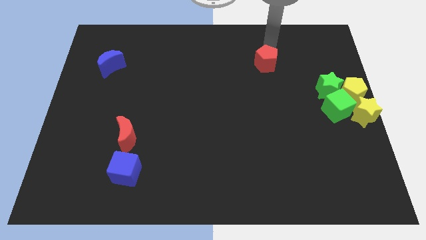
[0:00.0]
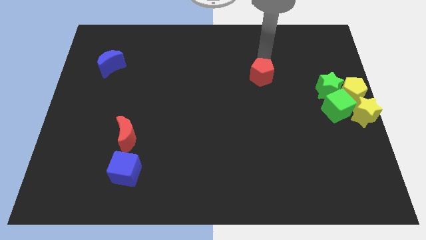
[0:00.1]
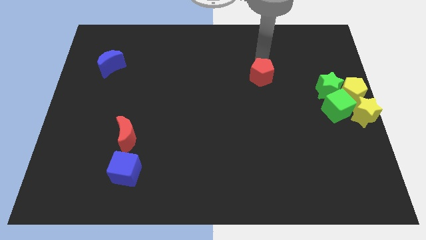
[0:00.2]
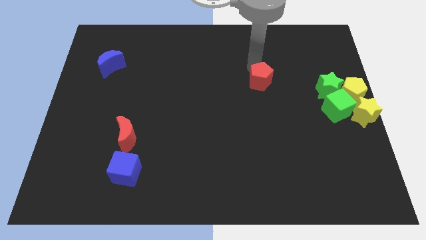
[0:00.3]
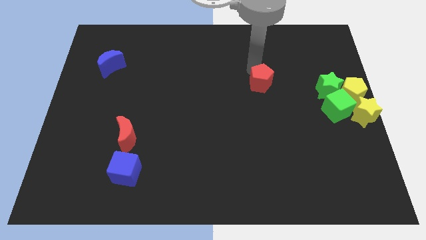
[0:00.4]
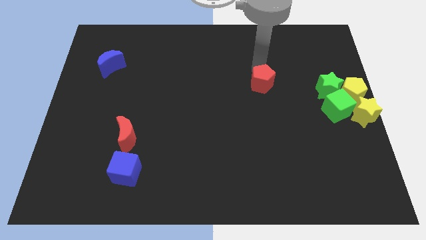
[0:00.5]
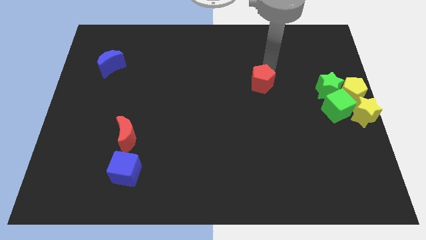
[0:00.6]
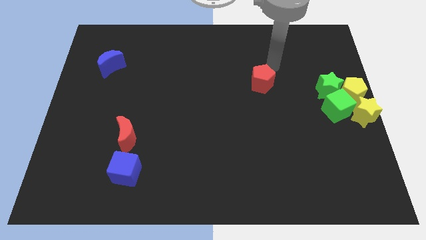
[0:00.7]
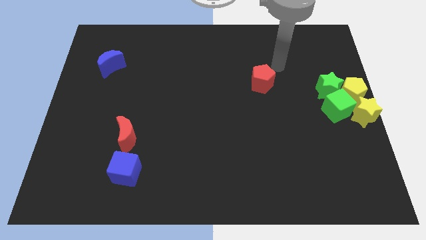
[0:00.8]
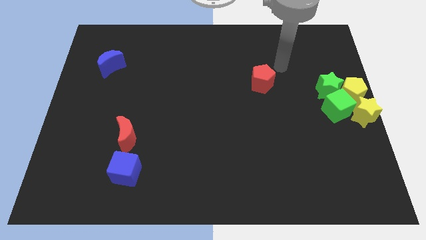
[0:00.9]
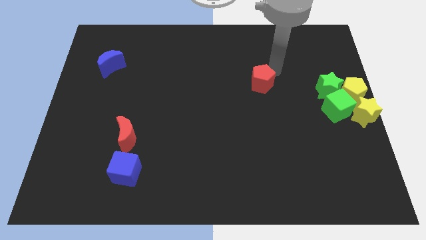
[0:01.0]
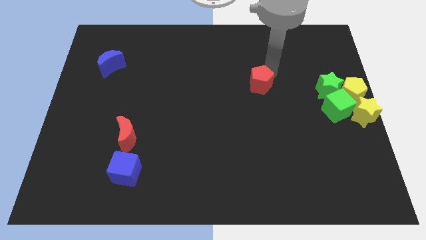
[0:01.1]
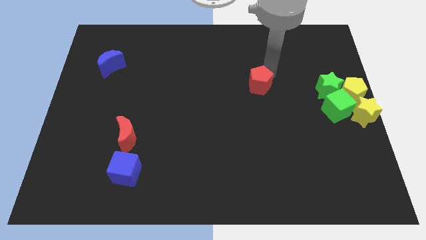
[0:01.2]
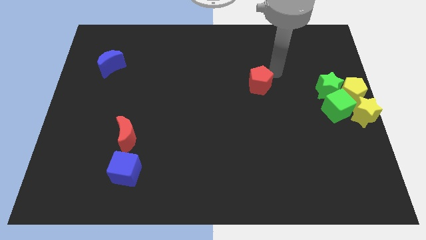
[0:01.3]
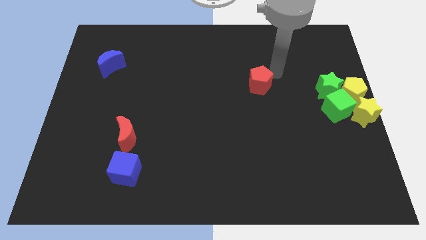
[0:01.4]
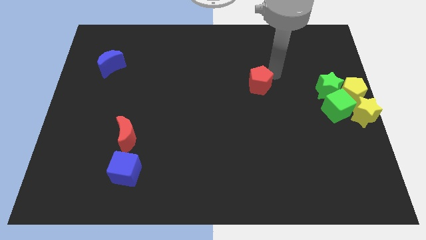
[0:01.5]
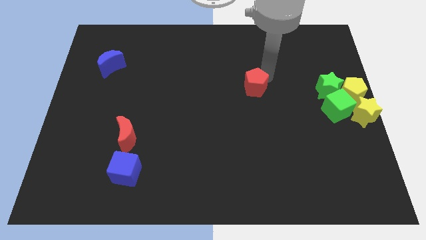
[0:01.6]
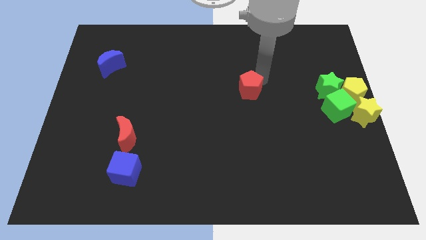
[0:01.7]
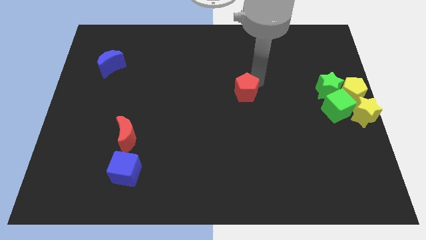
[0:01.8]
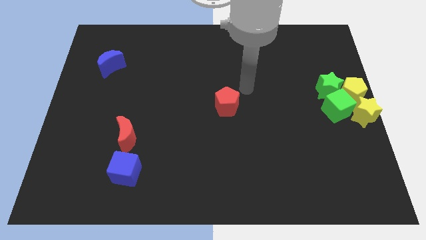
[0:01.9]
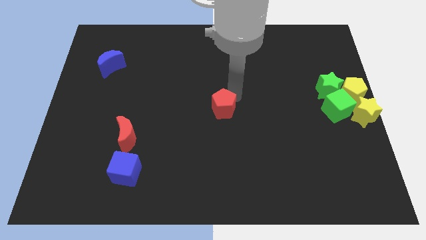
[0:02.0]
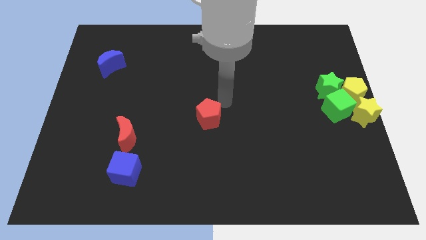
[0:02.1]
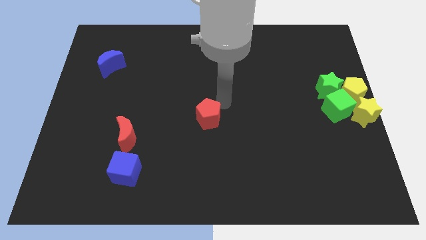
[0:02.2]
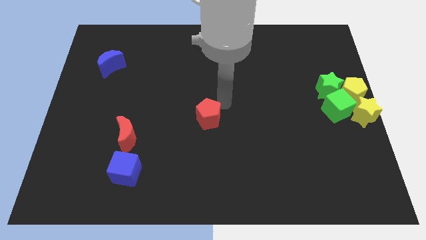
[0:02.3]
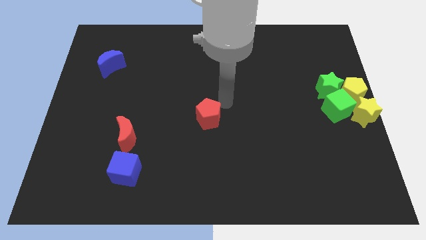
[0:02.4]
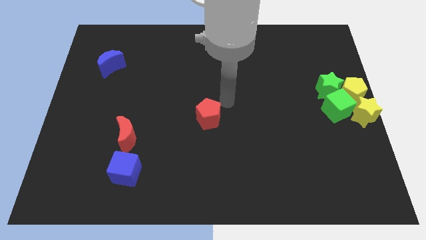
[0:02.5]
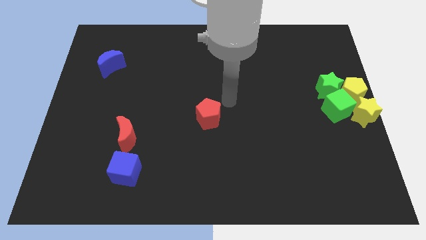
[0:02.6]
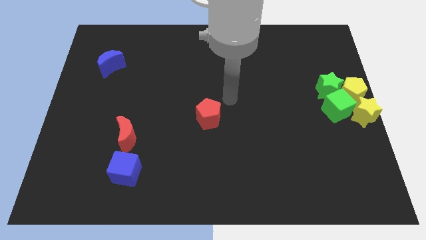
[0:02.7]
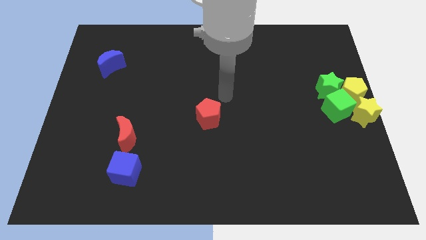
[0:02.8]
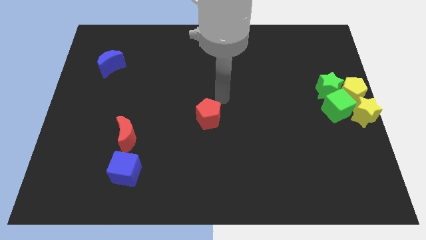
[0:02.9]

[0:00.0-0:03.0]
push the red pentagon to the center of the board

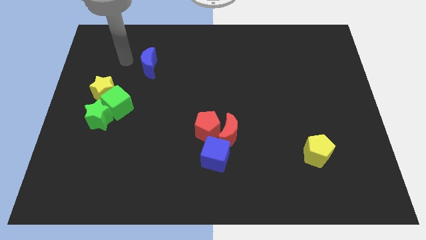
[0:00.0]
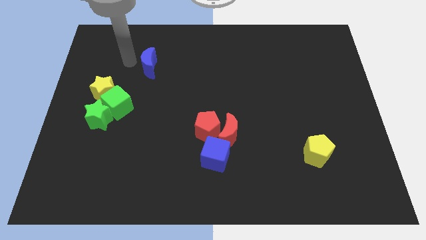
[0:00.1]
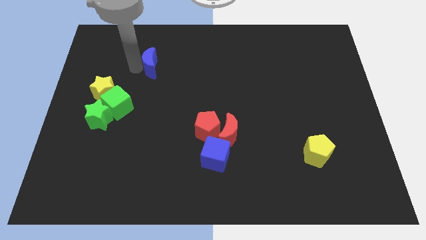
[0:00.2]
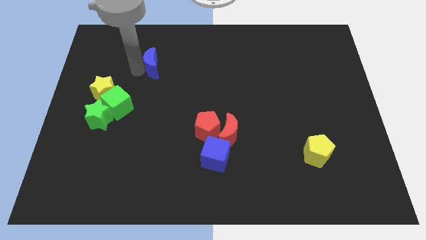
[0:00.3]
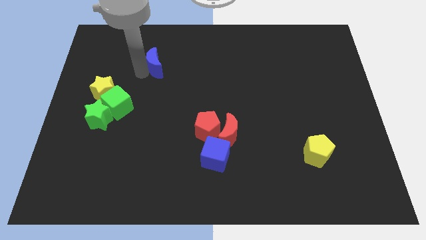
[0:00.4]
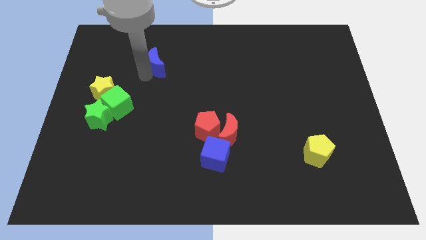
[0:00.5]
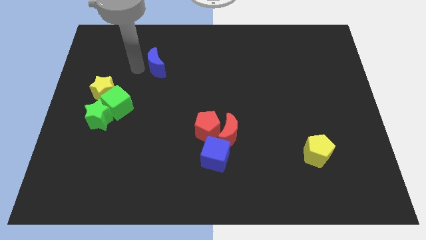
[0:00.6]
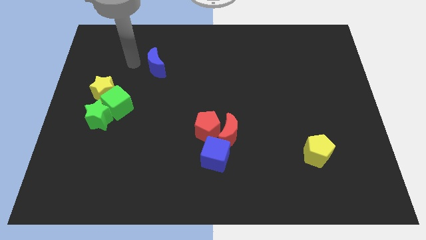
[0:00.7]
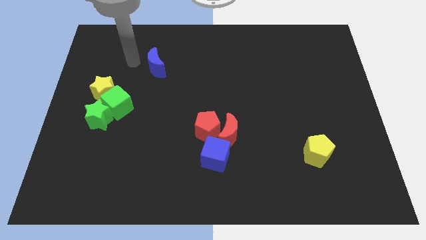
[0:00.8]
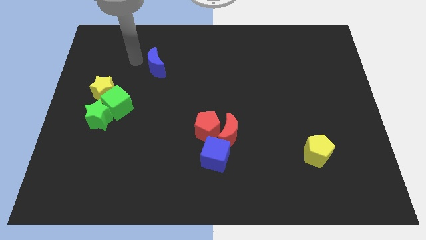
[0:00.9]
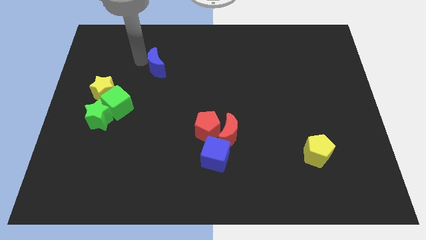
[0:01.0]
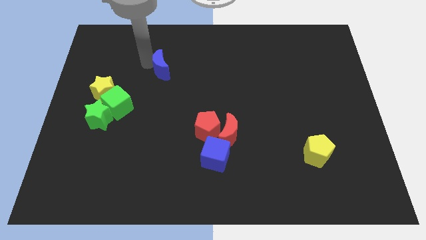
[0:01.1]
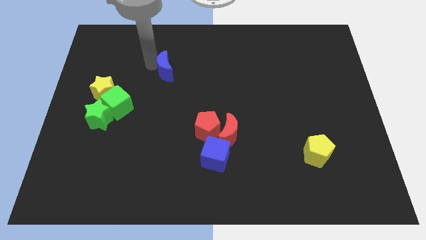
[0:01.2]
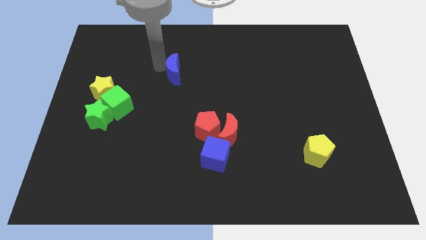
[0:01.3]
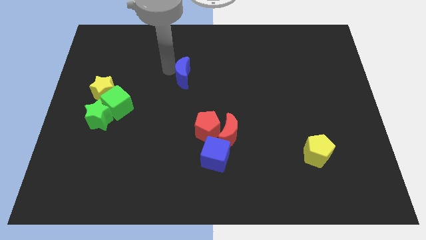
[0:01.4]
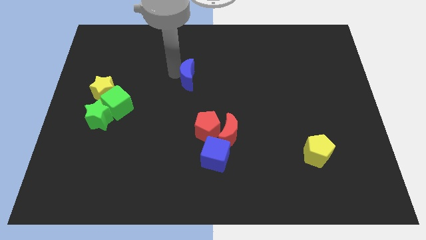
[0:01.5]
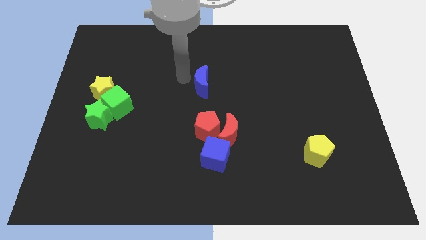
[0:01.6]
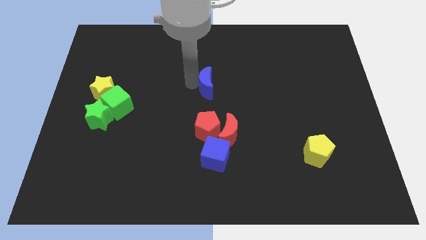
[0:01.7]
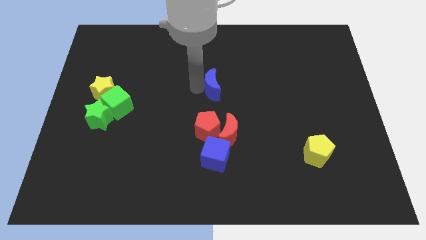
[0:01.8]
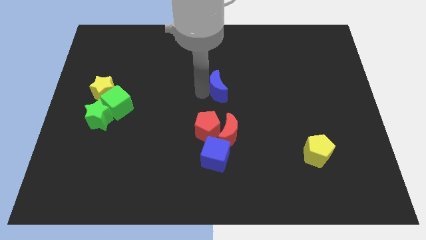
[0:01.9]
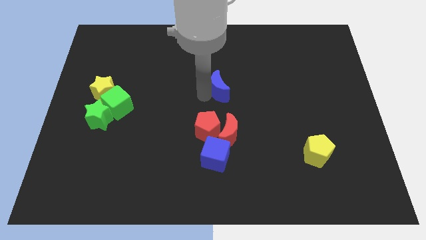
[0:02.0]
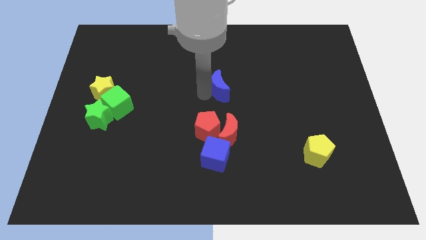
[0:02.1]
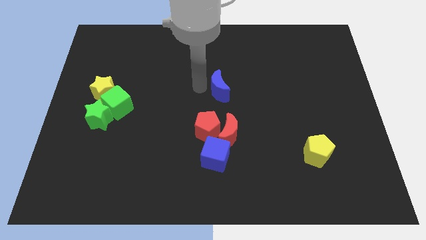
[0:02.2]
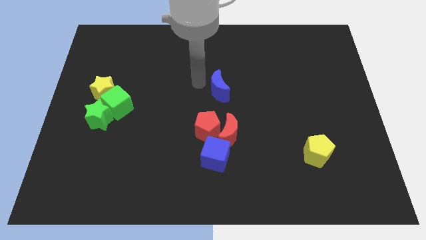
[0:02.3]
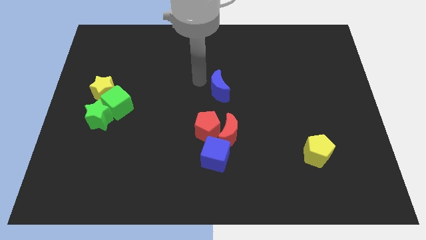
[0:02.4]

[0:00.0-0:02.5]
push the blue moon at the center of the board

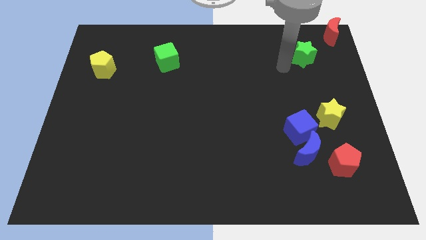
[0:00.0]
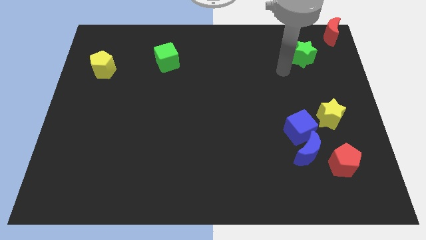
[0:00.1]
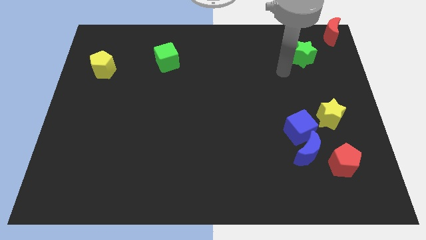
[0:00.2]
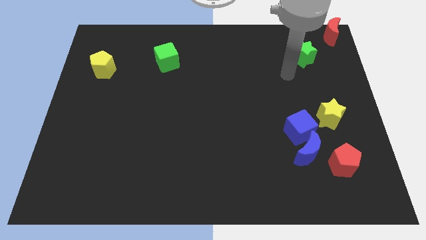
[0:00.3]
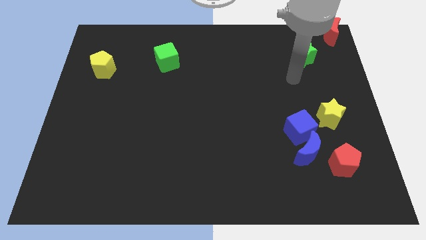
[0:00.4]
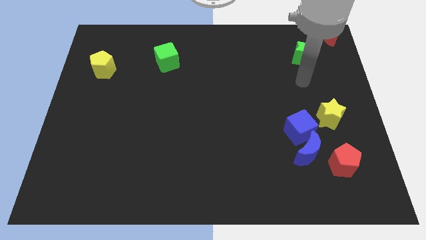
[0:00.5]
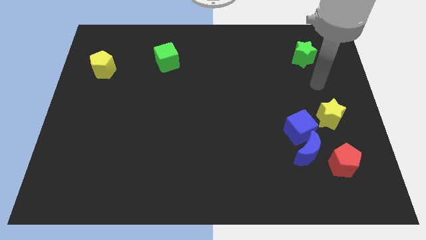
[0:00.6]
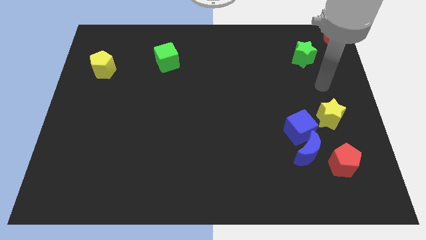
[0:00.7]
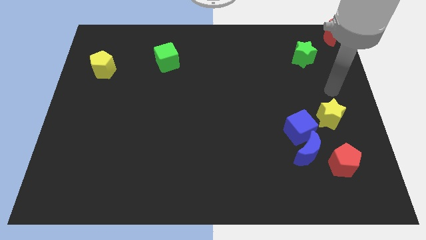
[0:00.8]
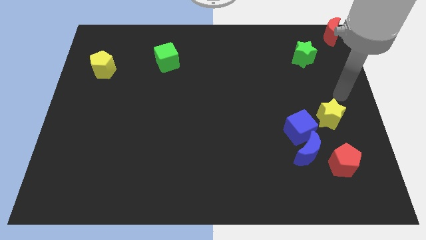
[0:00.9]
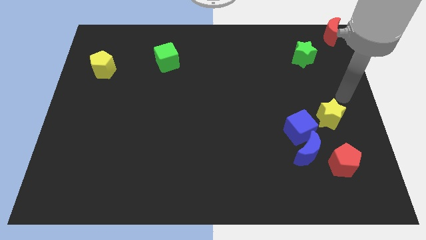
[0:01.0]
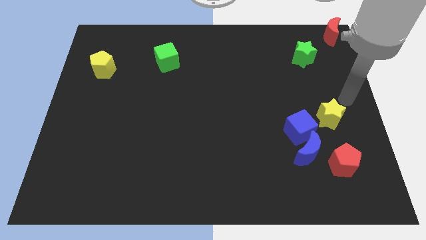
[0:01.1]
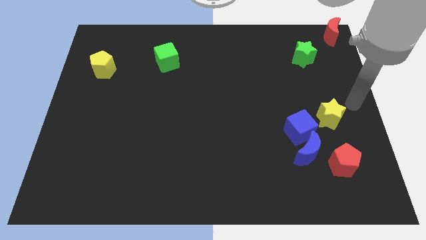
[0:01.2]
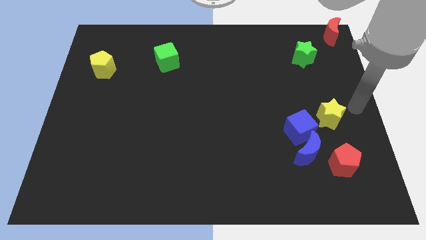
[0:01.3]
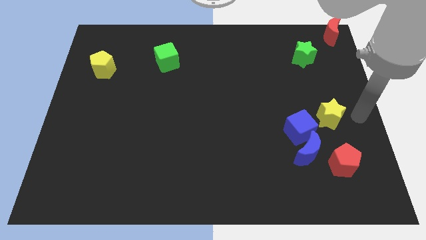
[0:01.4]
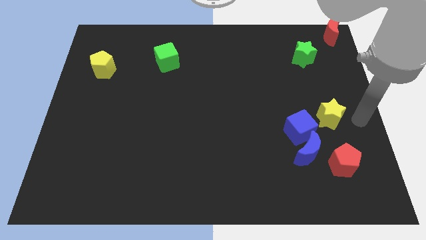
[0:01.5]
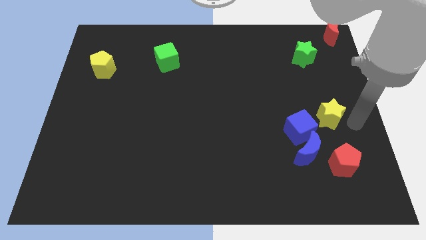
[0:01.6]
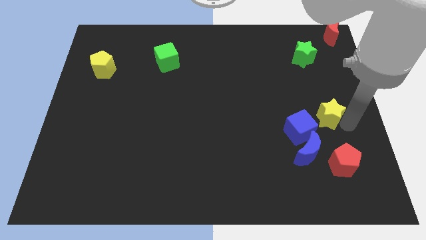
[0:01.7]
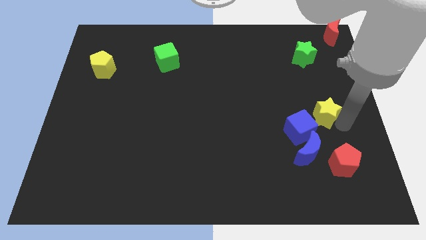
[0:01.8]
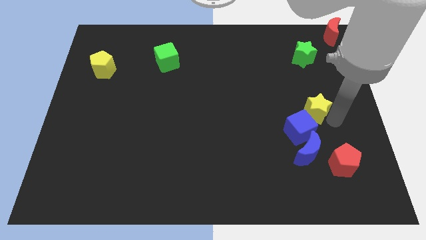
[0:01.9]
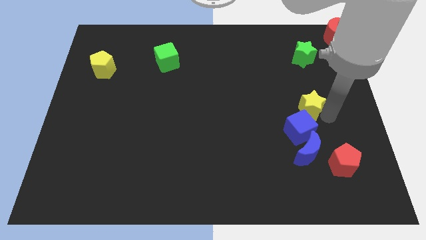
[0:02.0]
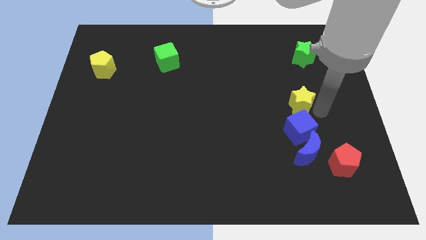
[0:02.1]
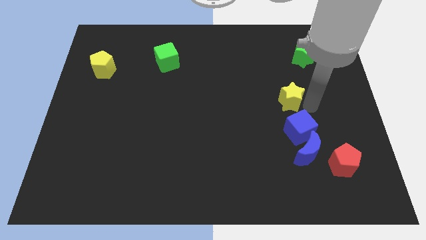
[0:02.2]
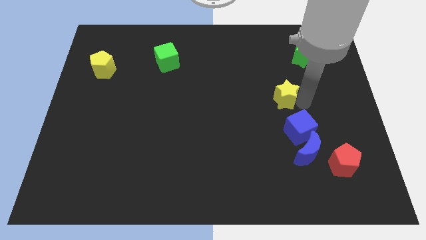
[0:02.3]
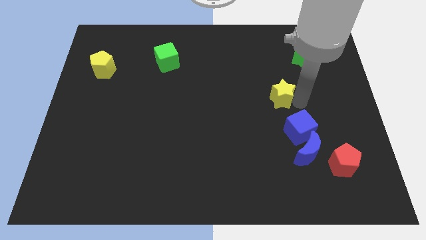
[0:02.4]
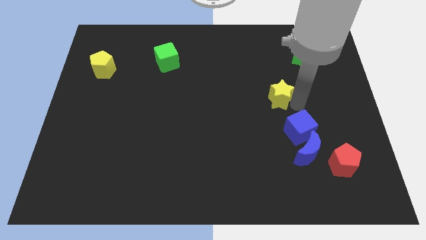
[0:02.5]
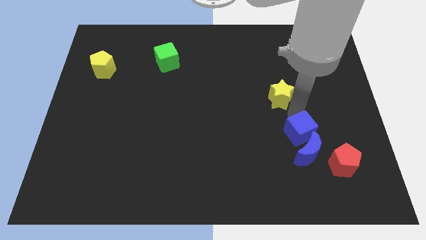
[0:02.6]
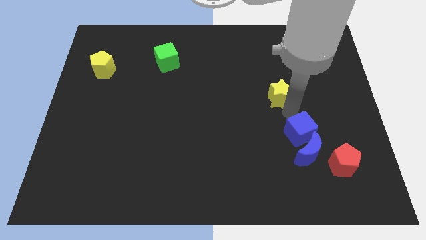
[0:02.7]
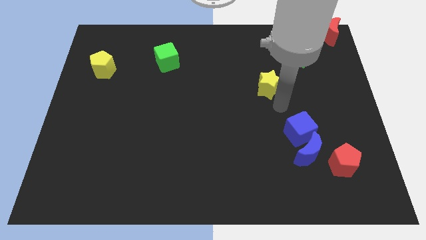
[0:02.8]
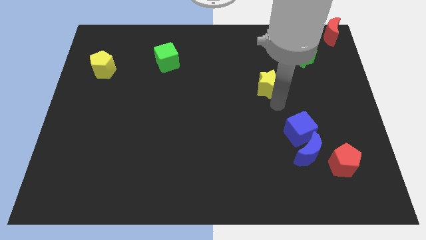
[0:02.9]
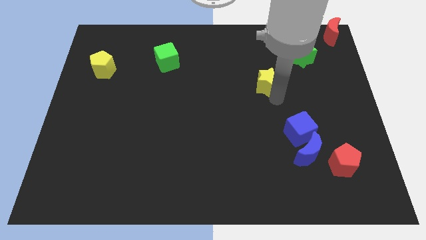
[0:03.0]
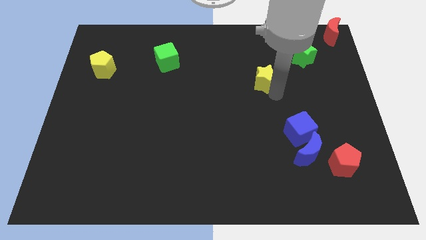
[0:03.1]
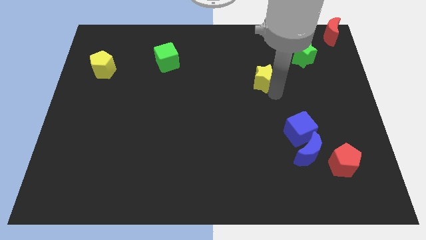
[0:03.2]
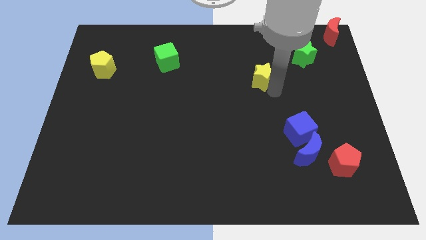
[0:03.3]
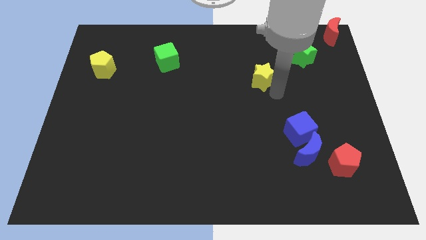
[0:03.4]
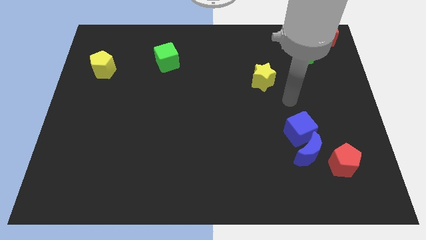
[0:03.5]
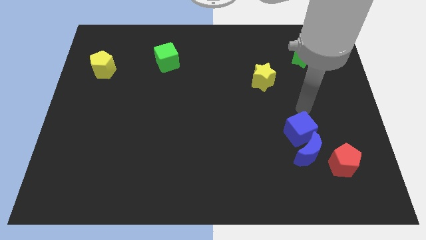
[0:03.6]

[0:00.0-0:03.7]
push the yellow star towards the top left of the board
